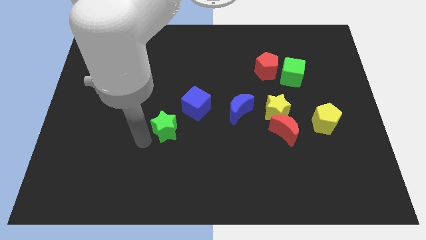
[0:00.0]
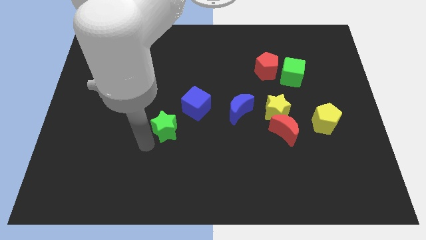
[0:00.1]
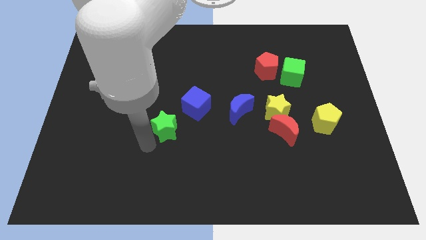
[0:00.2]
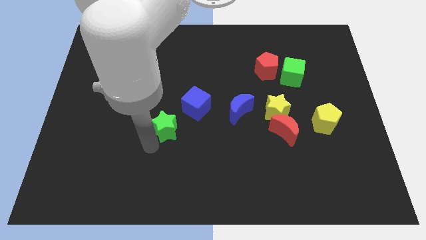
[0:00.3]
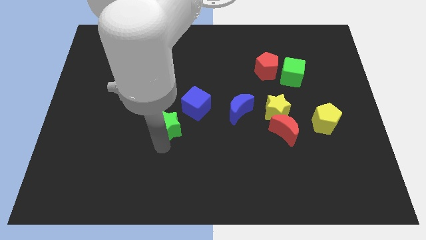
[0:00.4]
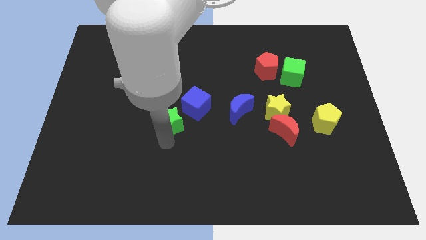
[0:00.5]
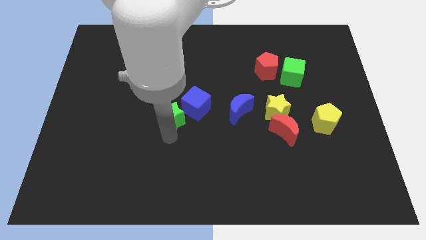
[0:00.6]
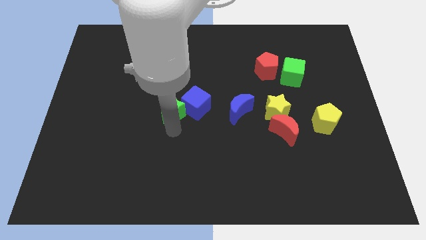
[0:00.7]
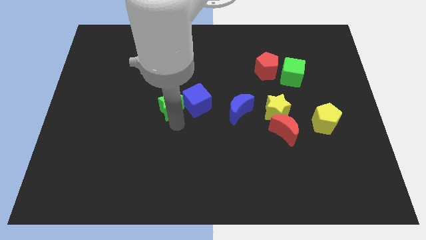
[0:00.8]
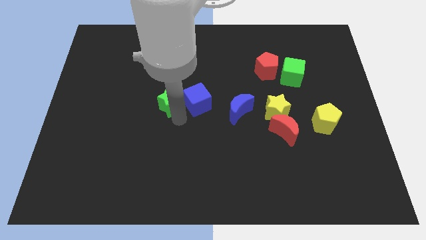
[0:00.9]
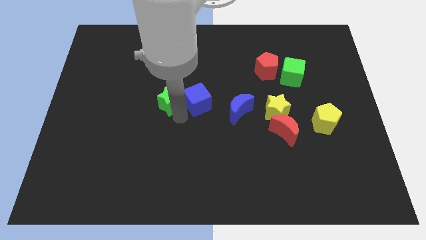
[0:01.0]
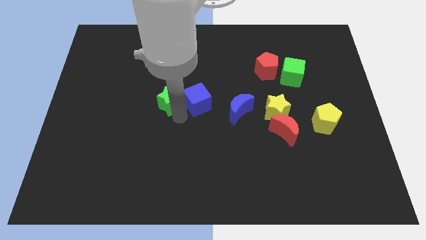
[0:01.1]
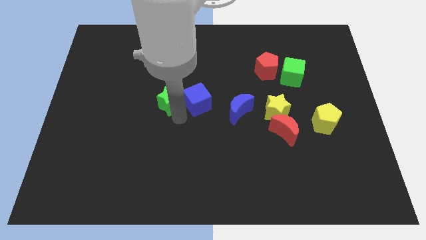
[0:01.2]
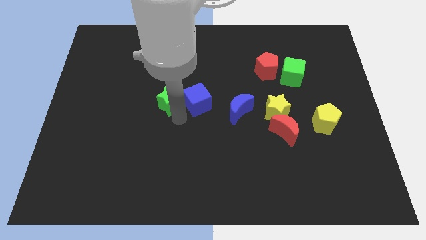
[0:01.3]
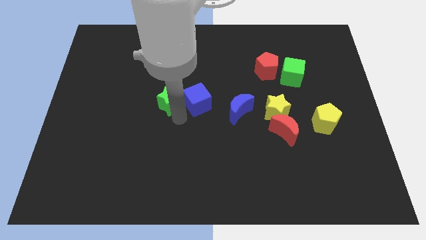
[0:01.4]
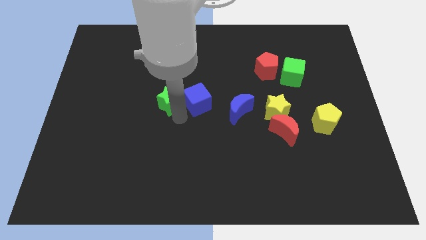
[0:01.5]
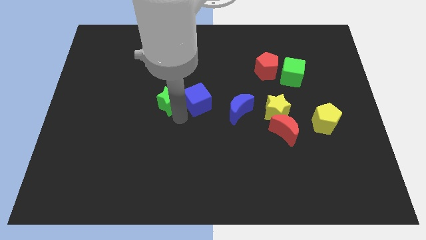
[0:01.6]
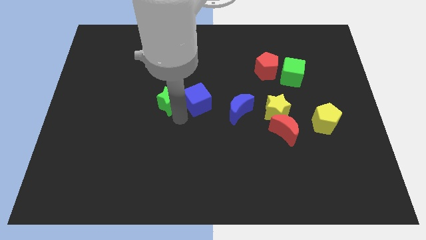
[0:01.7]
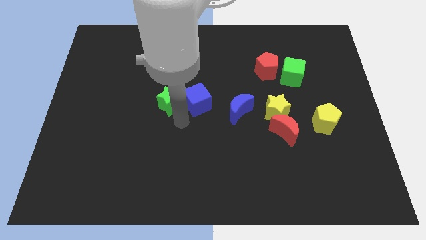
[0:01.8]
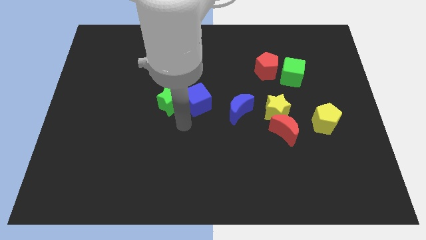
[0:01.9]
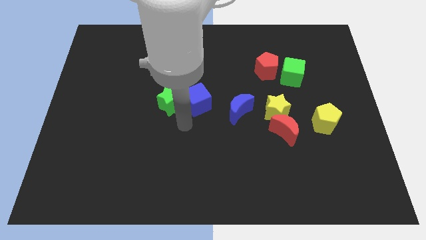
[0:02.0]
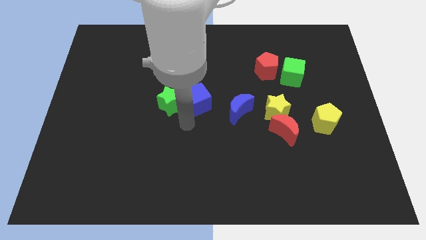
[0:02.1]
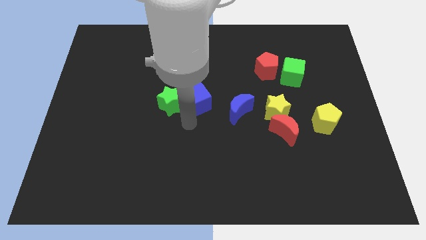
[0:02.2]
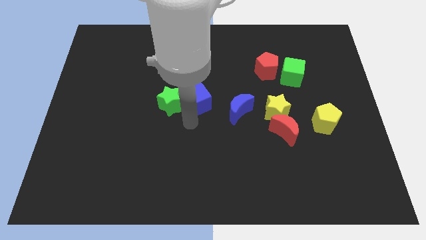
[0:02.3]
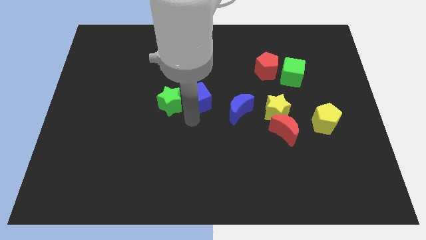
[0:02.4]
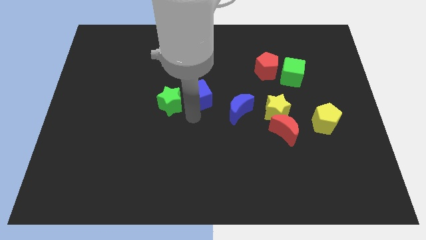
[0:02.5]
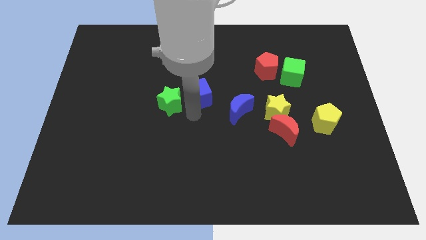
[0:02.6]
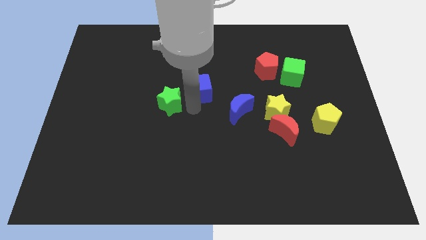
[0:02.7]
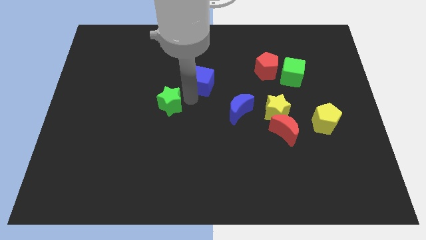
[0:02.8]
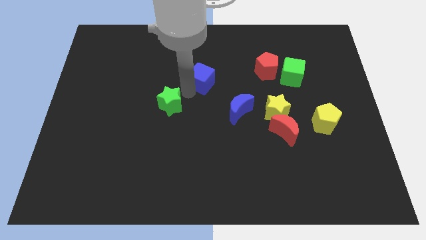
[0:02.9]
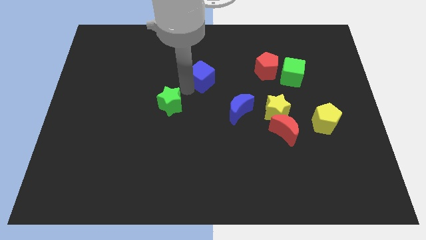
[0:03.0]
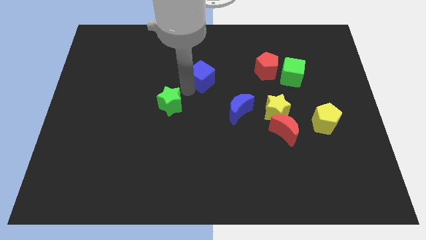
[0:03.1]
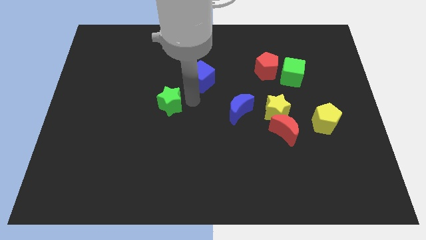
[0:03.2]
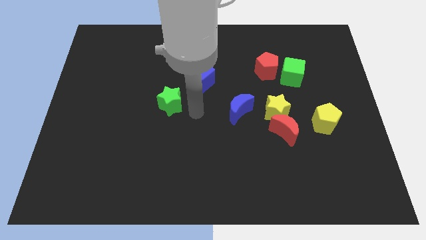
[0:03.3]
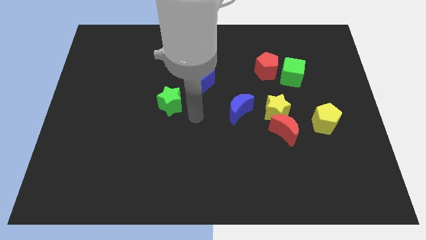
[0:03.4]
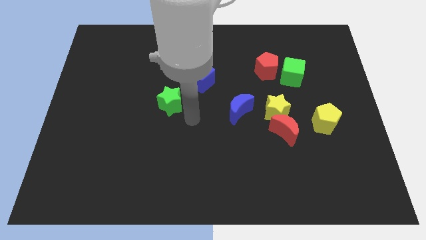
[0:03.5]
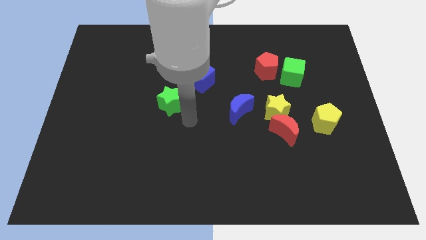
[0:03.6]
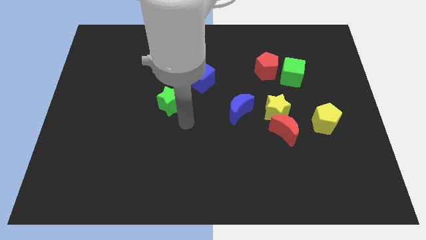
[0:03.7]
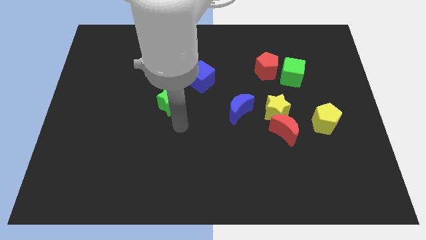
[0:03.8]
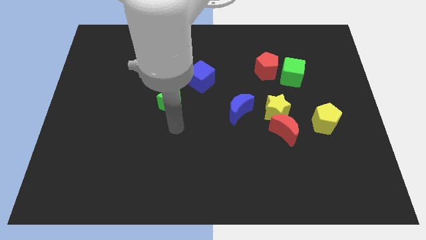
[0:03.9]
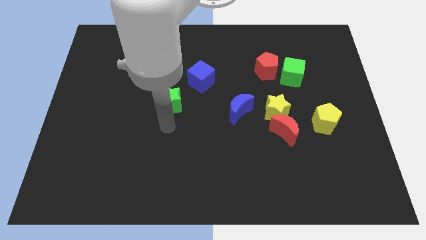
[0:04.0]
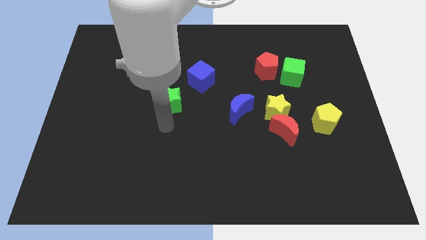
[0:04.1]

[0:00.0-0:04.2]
push the green star into the blue cube

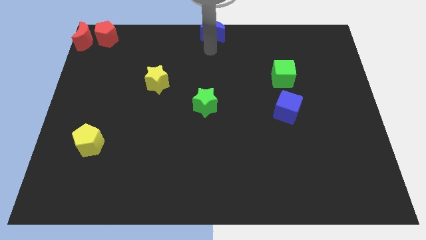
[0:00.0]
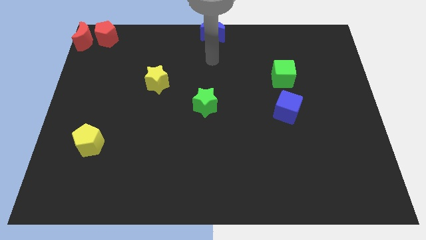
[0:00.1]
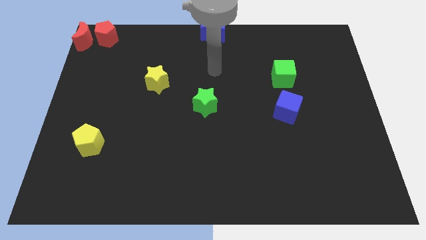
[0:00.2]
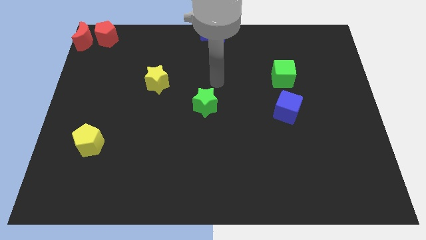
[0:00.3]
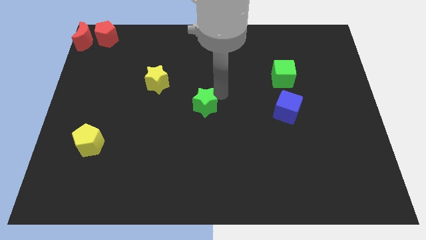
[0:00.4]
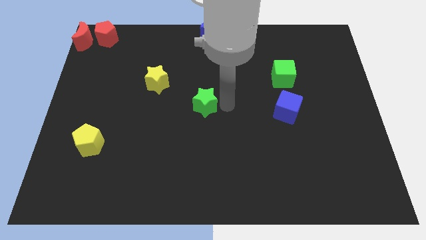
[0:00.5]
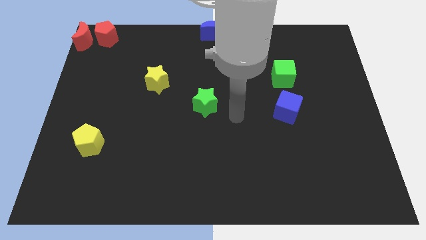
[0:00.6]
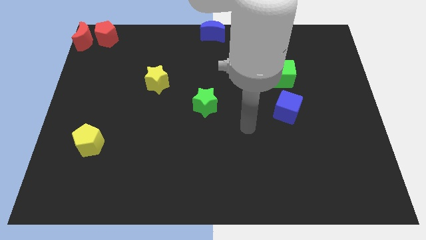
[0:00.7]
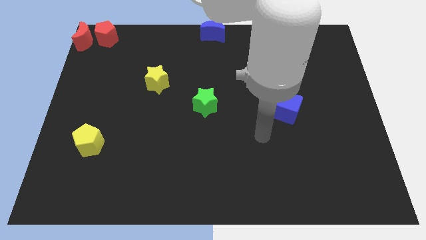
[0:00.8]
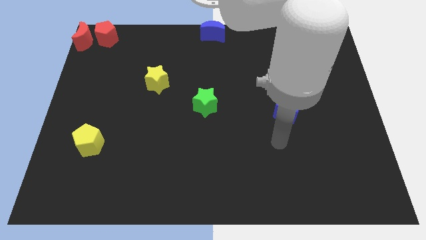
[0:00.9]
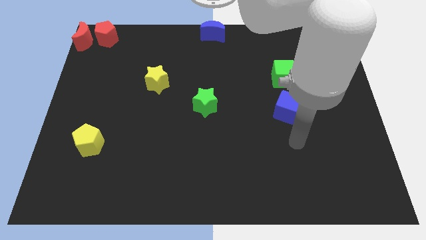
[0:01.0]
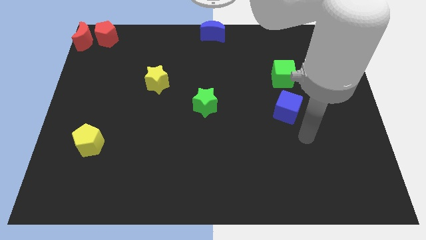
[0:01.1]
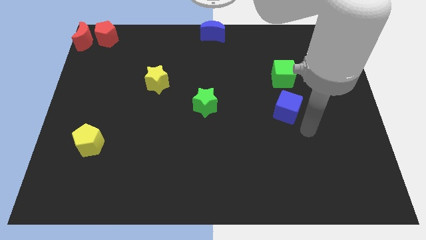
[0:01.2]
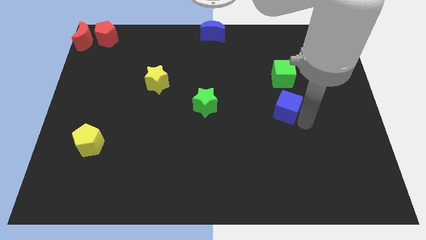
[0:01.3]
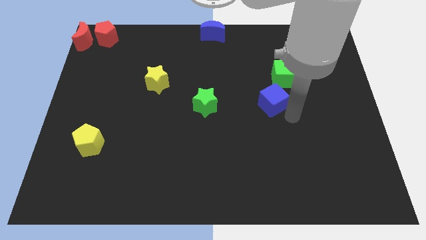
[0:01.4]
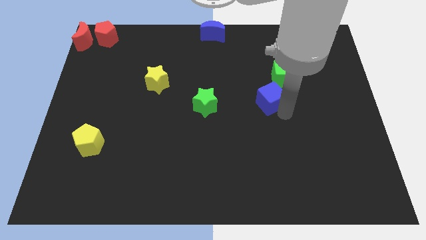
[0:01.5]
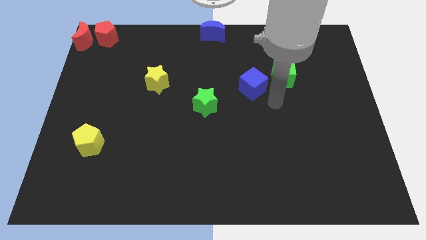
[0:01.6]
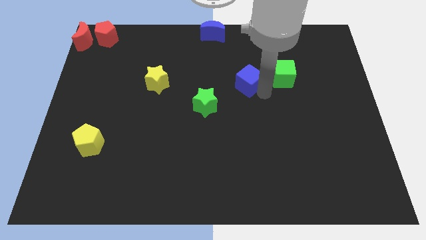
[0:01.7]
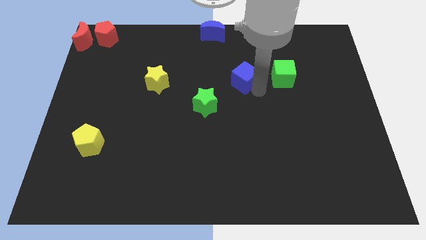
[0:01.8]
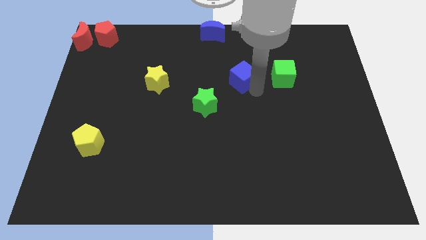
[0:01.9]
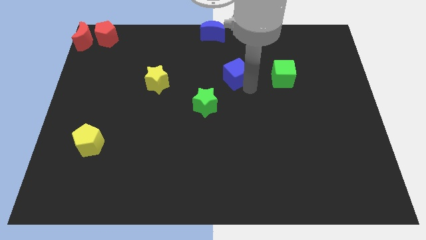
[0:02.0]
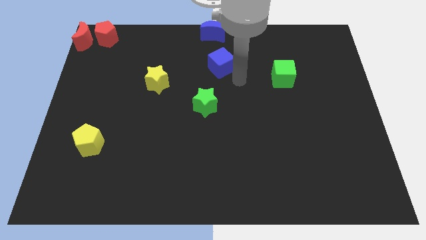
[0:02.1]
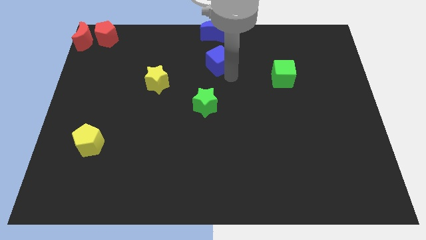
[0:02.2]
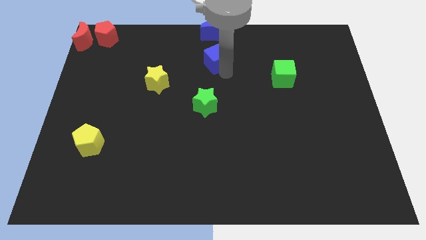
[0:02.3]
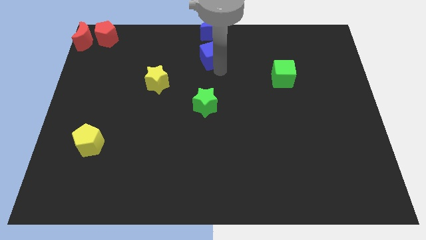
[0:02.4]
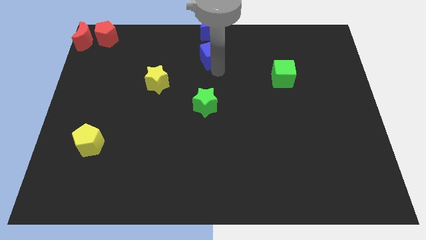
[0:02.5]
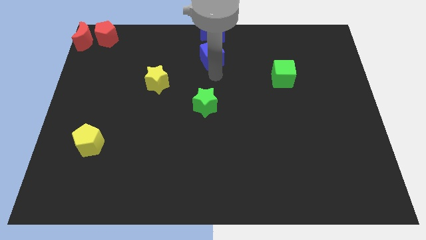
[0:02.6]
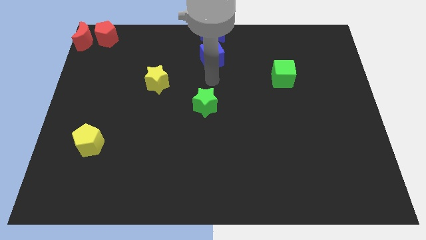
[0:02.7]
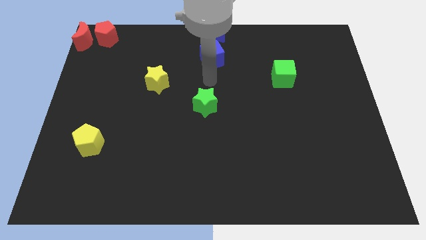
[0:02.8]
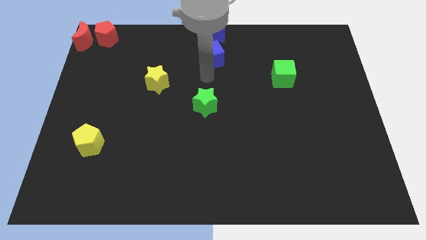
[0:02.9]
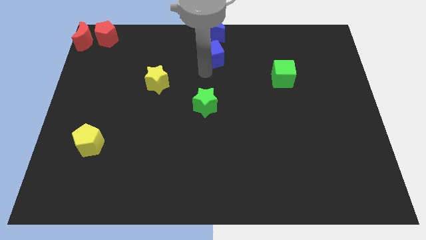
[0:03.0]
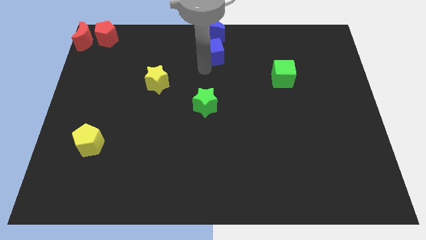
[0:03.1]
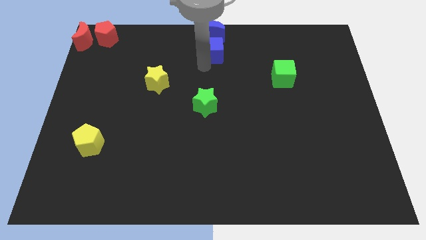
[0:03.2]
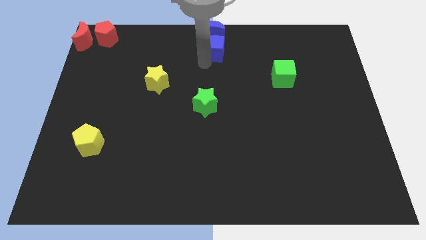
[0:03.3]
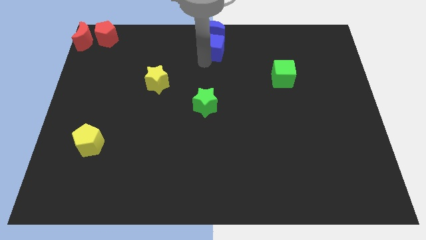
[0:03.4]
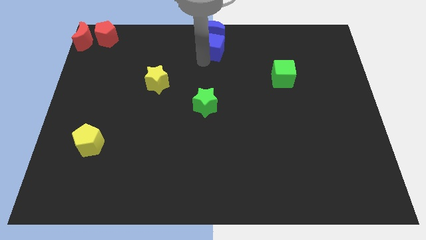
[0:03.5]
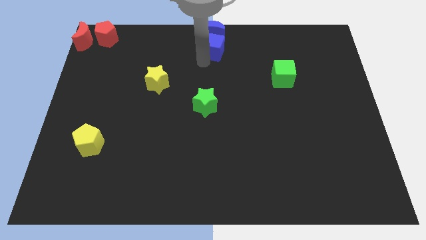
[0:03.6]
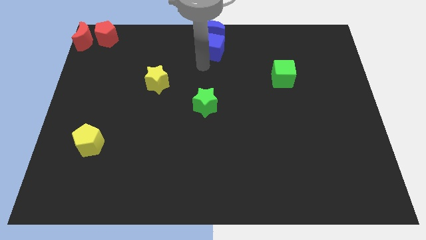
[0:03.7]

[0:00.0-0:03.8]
move the blue cube to the bottom of the blue crescent

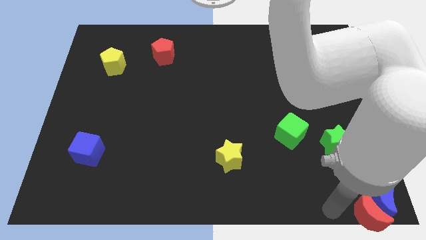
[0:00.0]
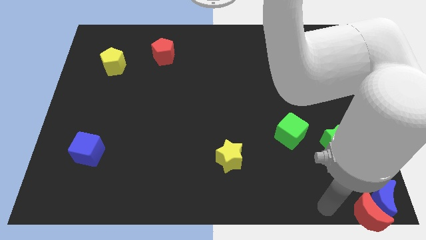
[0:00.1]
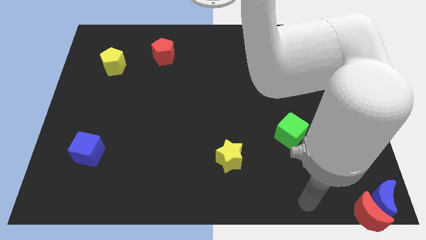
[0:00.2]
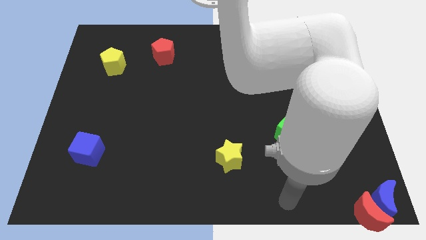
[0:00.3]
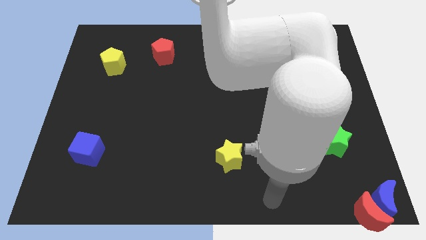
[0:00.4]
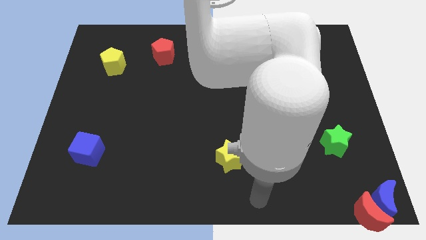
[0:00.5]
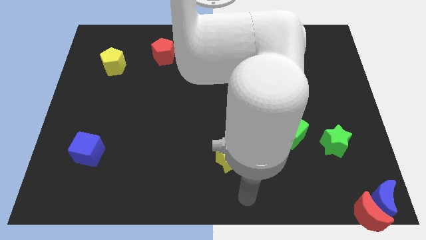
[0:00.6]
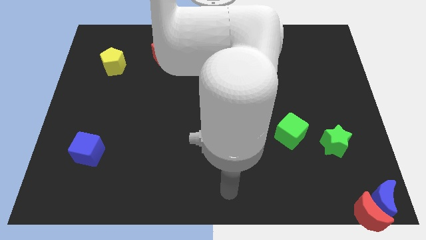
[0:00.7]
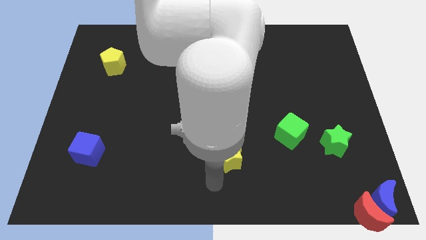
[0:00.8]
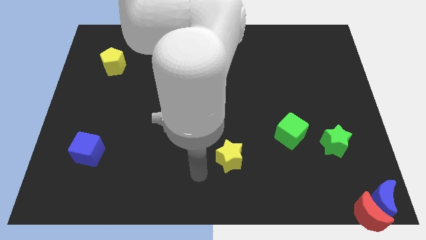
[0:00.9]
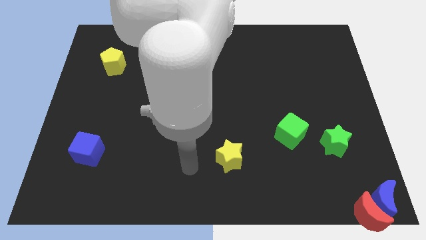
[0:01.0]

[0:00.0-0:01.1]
point your arm at the left of the yellow star
